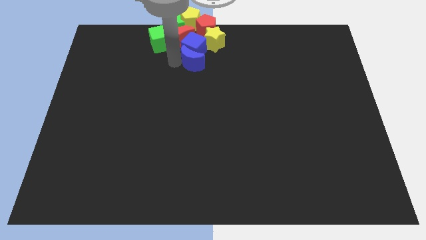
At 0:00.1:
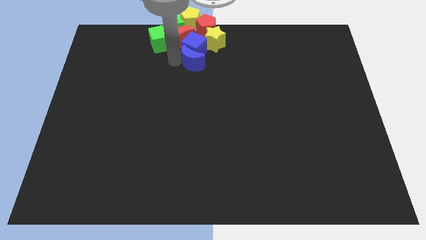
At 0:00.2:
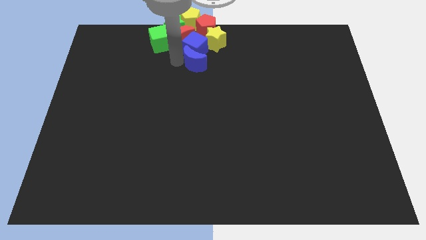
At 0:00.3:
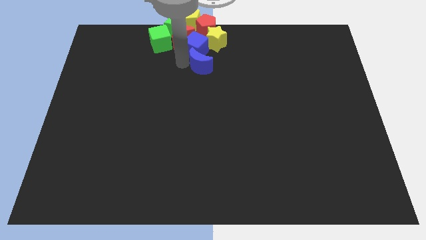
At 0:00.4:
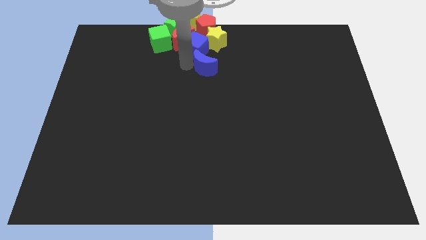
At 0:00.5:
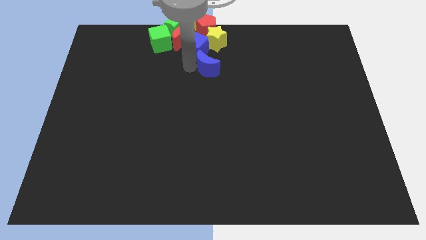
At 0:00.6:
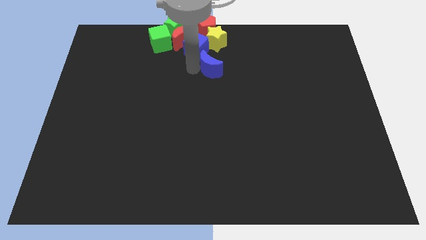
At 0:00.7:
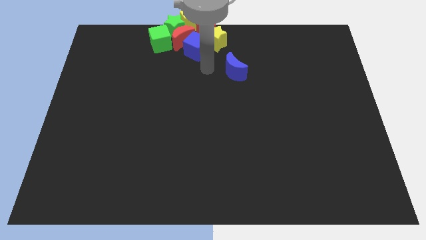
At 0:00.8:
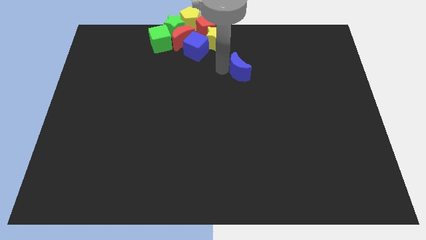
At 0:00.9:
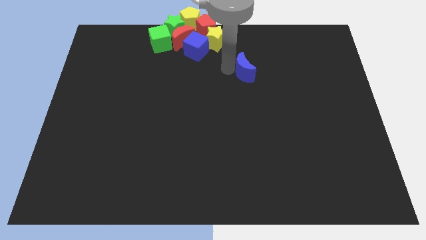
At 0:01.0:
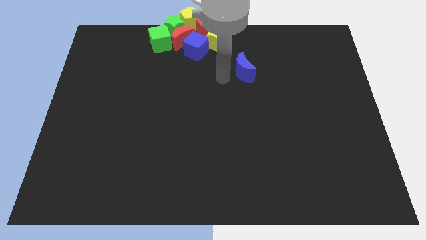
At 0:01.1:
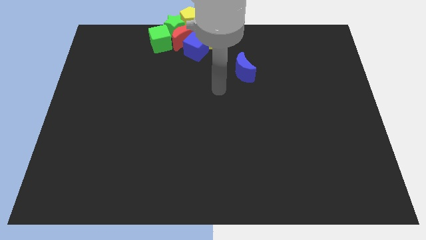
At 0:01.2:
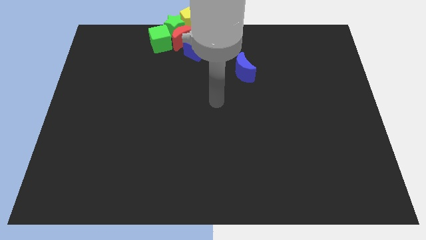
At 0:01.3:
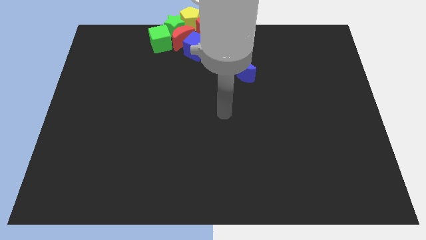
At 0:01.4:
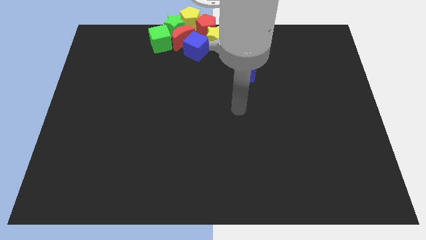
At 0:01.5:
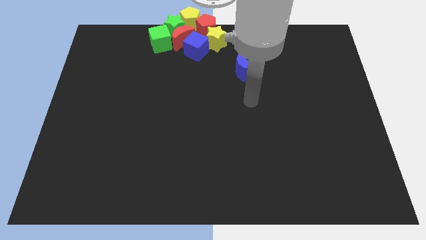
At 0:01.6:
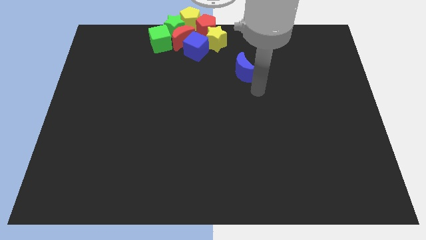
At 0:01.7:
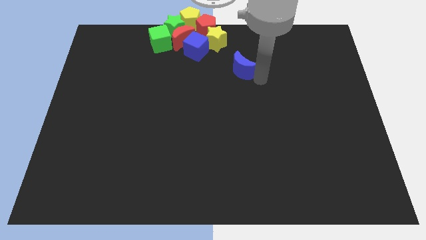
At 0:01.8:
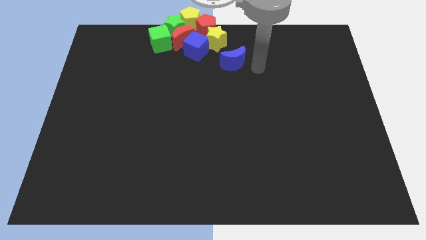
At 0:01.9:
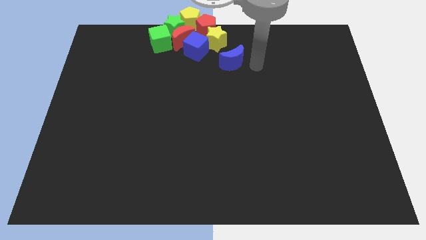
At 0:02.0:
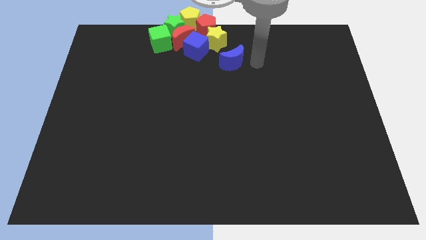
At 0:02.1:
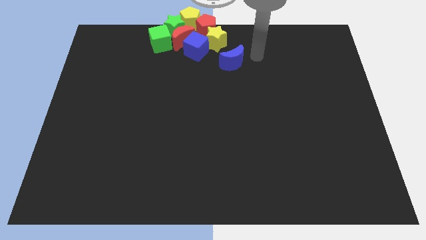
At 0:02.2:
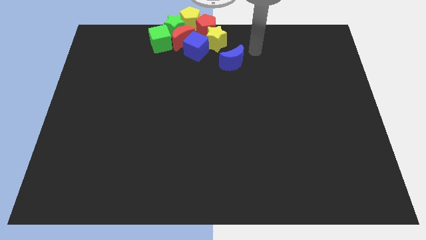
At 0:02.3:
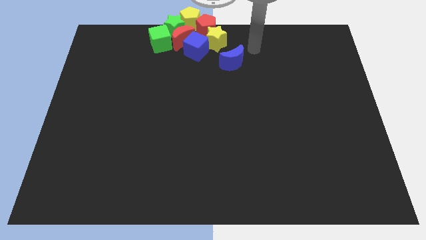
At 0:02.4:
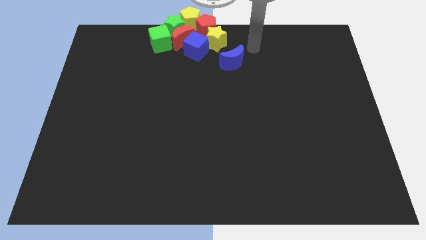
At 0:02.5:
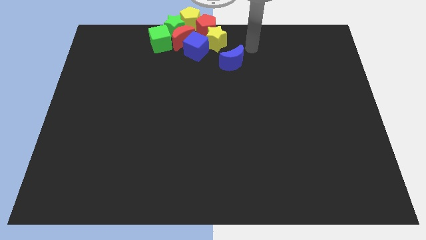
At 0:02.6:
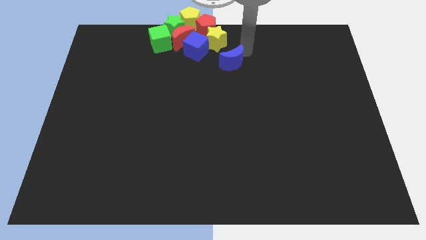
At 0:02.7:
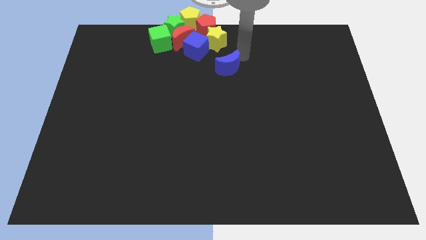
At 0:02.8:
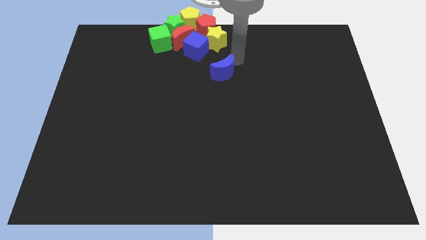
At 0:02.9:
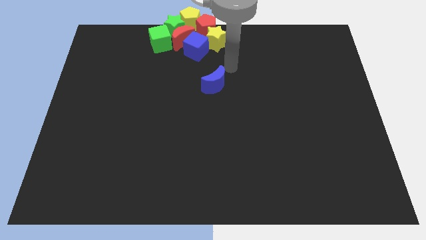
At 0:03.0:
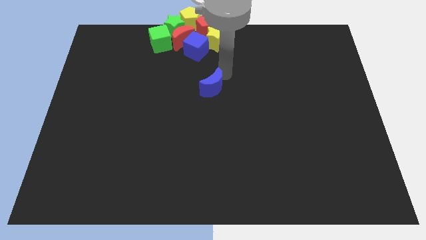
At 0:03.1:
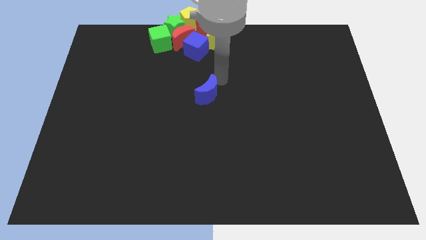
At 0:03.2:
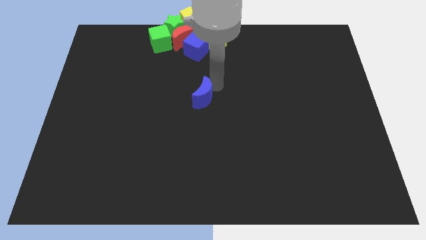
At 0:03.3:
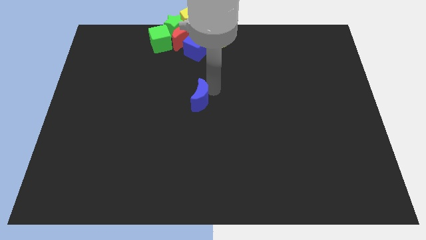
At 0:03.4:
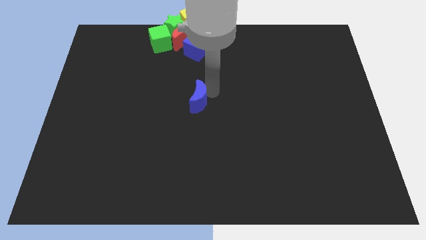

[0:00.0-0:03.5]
place the blue moon down to the blue cube

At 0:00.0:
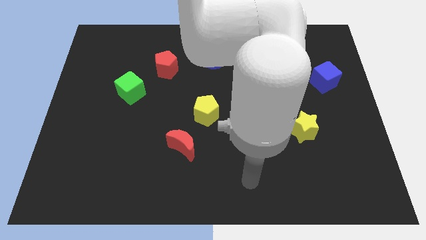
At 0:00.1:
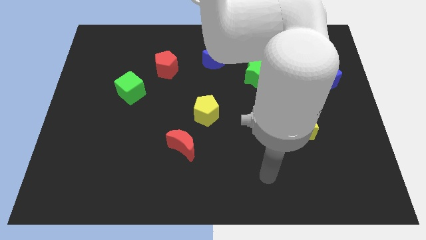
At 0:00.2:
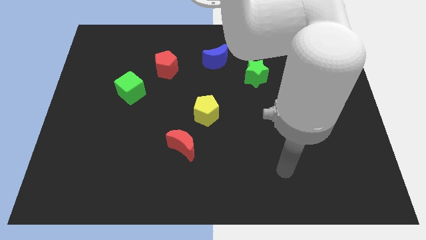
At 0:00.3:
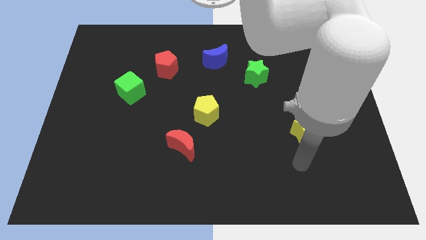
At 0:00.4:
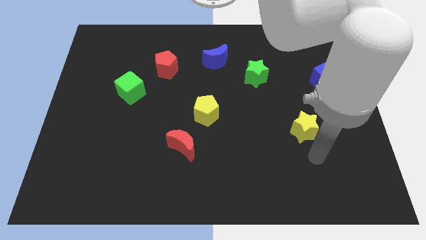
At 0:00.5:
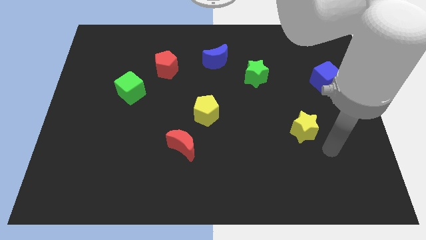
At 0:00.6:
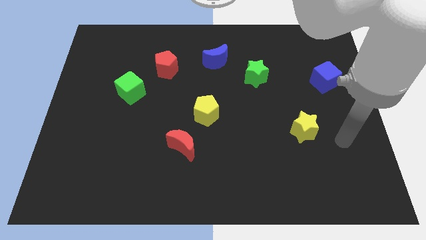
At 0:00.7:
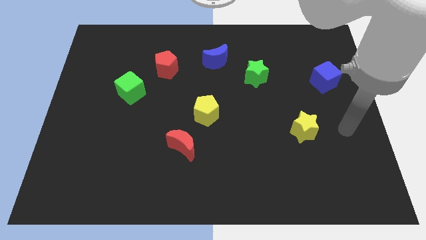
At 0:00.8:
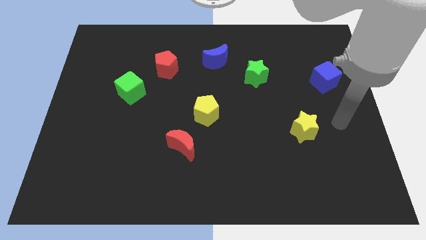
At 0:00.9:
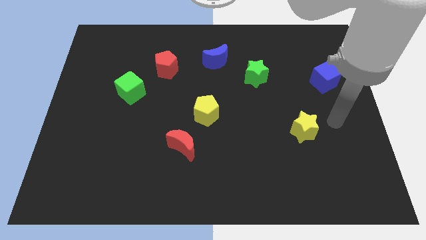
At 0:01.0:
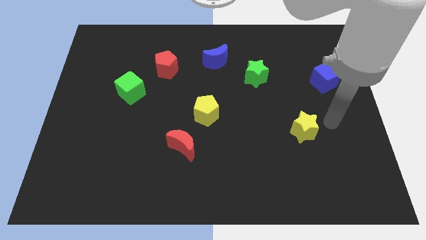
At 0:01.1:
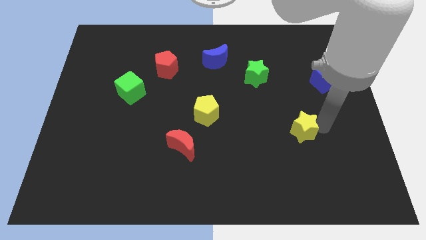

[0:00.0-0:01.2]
point the arm to the right of the yellow star

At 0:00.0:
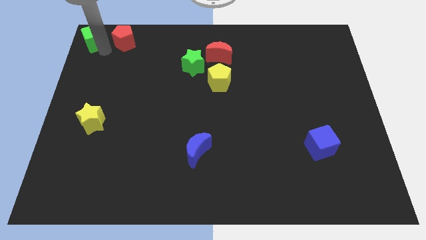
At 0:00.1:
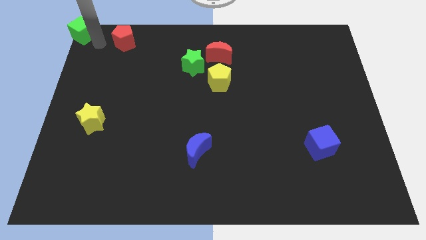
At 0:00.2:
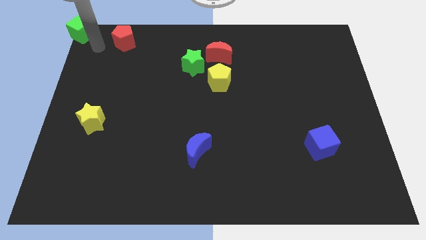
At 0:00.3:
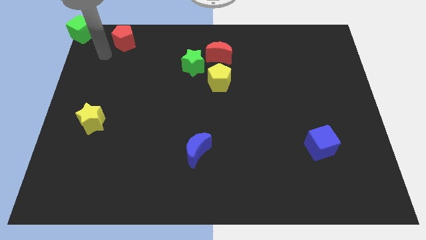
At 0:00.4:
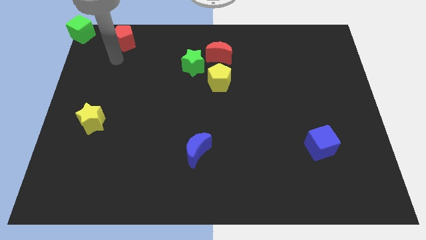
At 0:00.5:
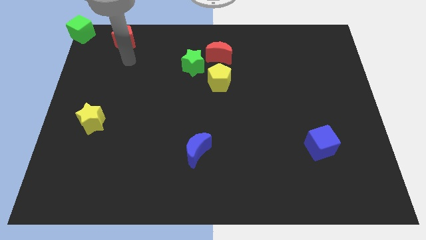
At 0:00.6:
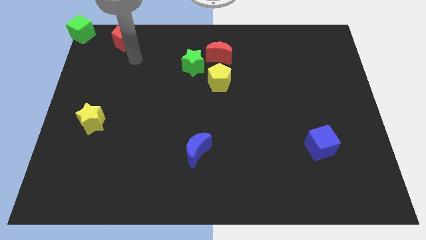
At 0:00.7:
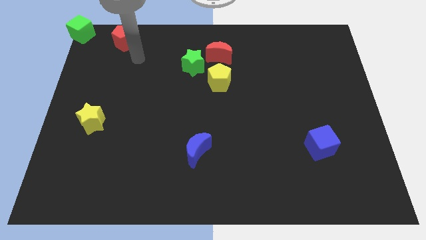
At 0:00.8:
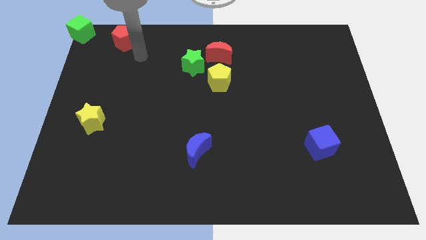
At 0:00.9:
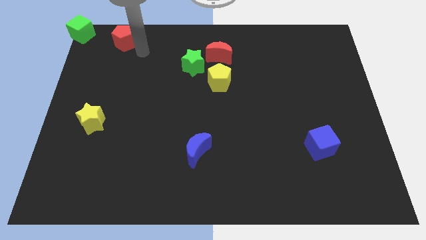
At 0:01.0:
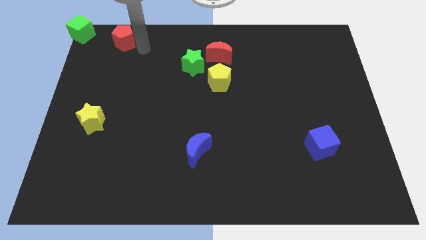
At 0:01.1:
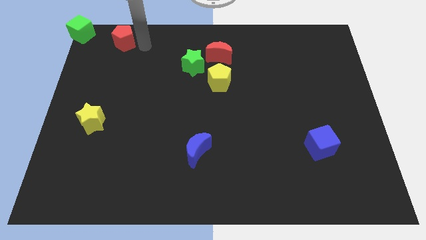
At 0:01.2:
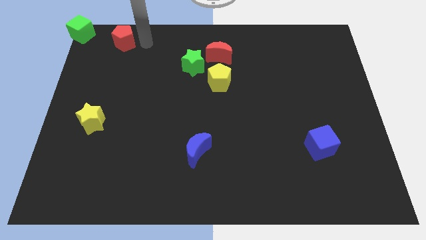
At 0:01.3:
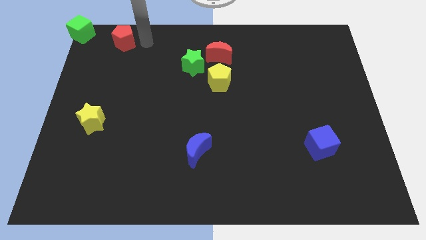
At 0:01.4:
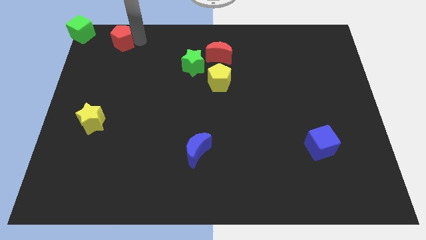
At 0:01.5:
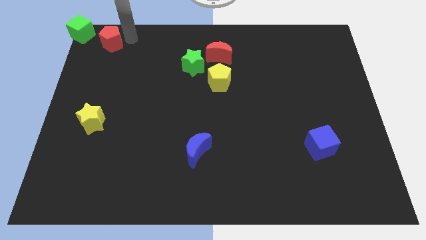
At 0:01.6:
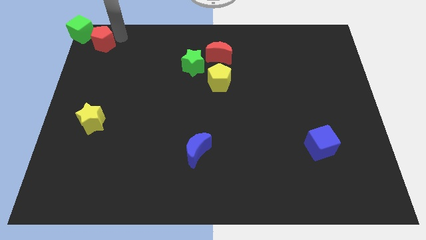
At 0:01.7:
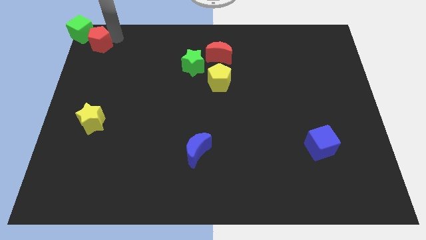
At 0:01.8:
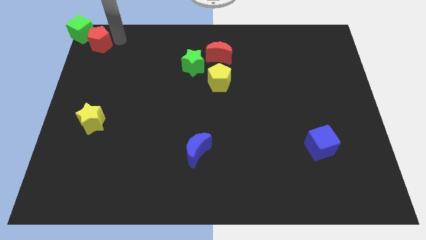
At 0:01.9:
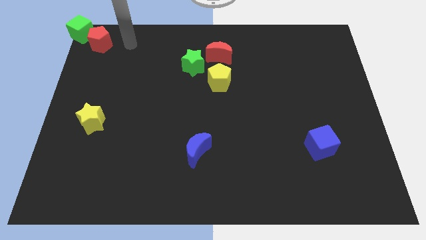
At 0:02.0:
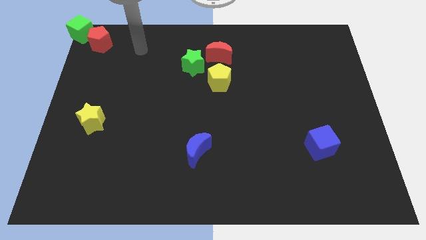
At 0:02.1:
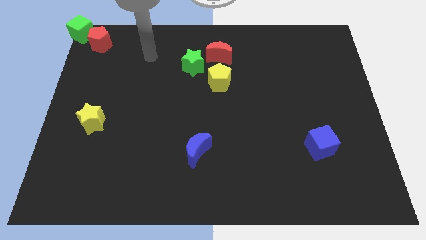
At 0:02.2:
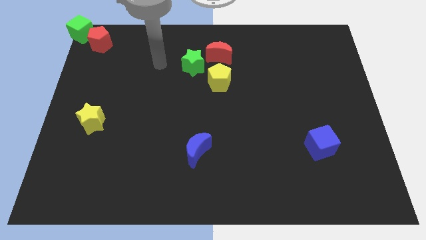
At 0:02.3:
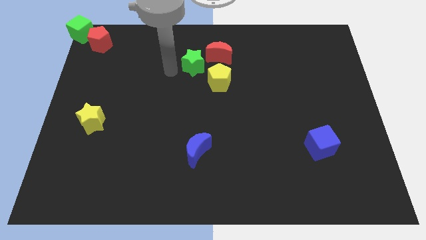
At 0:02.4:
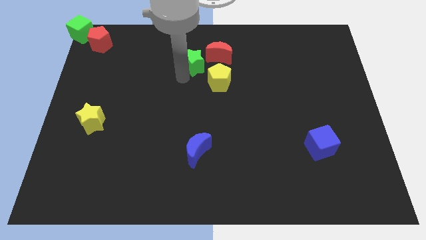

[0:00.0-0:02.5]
push the red pentagon into the green cube

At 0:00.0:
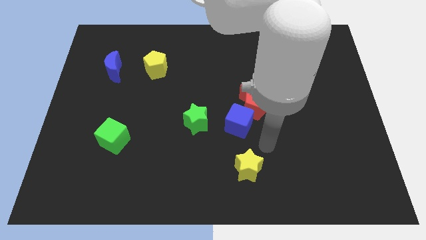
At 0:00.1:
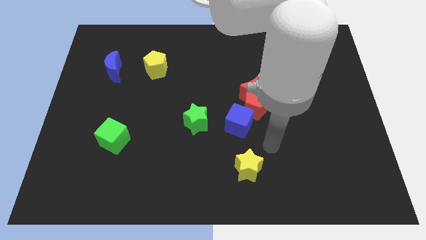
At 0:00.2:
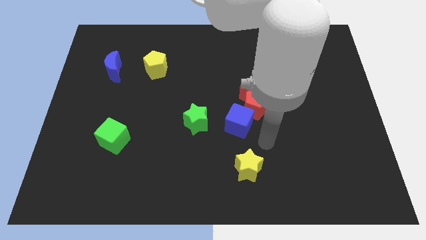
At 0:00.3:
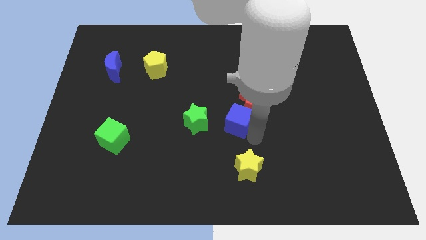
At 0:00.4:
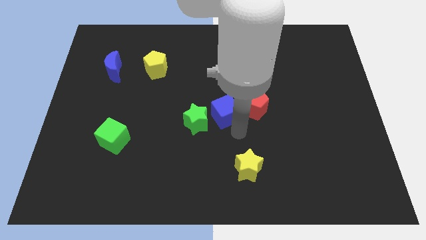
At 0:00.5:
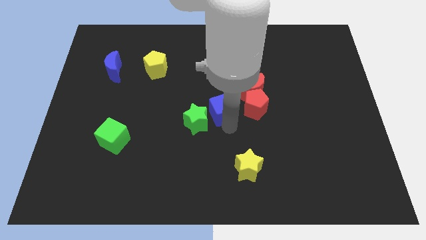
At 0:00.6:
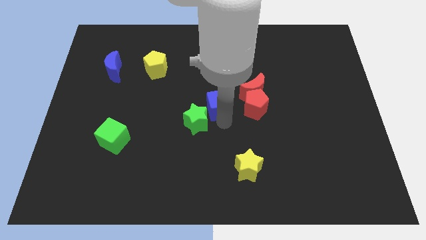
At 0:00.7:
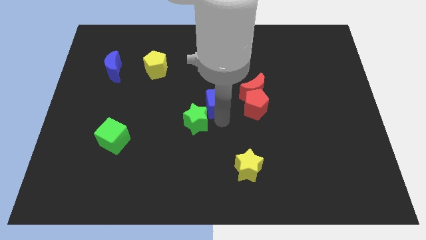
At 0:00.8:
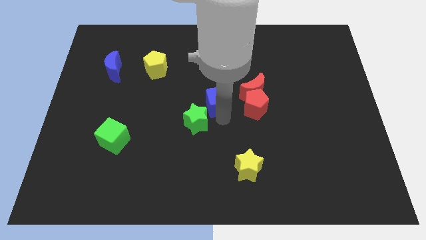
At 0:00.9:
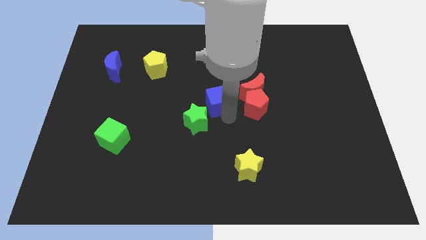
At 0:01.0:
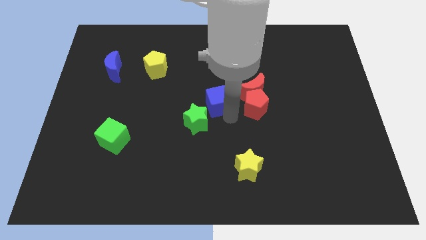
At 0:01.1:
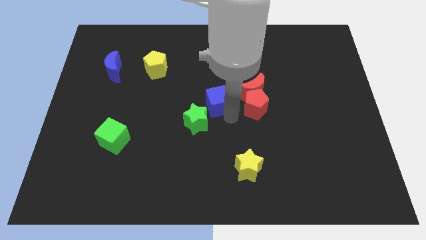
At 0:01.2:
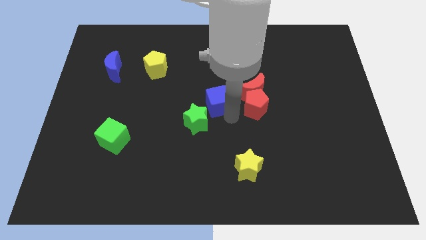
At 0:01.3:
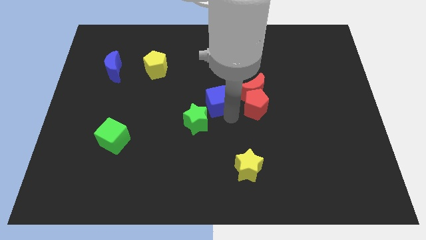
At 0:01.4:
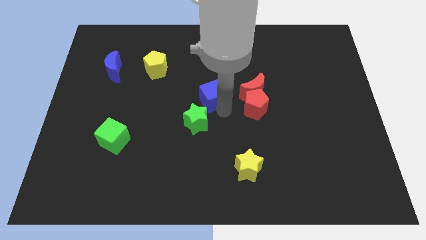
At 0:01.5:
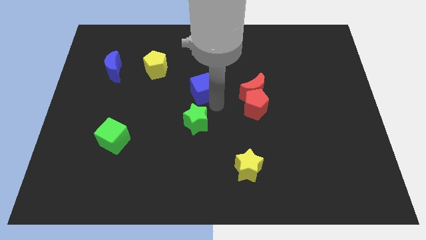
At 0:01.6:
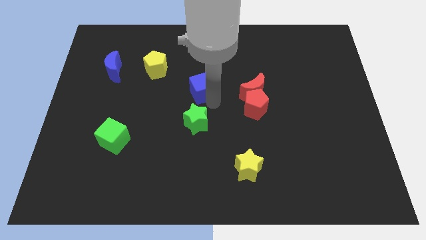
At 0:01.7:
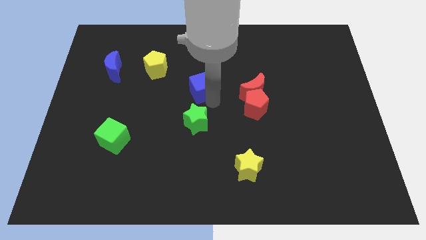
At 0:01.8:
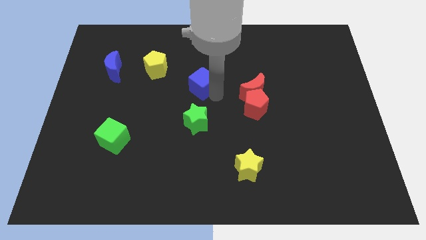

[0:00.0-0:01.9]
push the blue cube top to the green star
